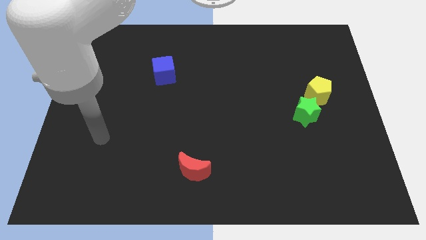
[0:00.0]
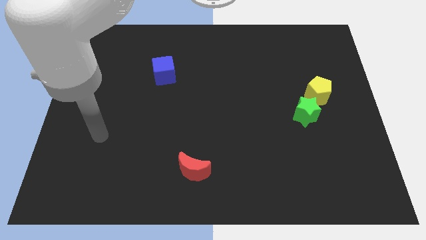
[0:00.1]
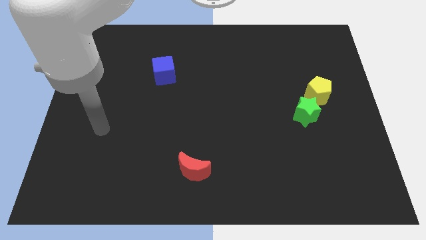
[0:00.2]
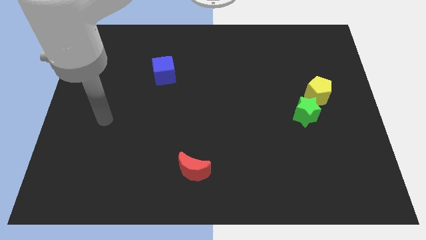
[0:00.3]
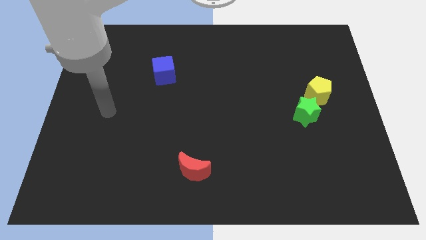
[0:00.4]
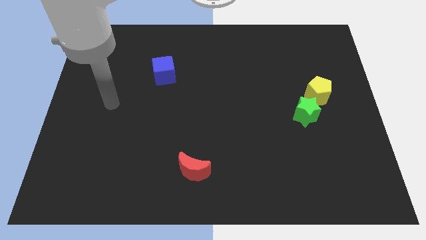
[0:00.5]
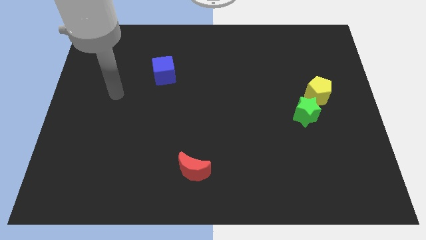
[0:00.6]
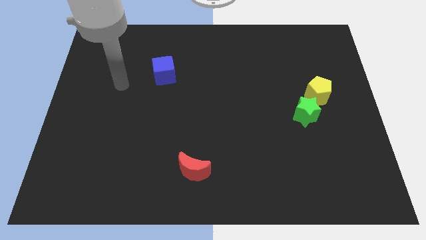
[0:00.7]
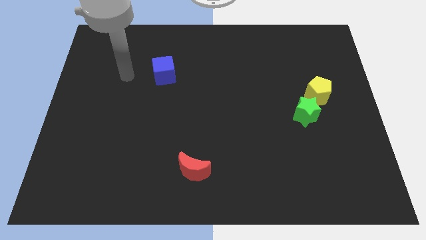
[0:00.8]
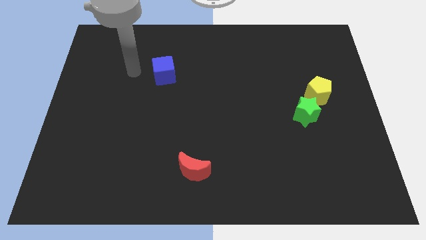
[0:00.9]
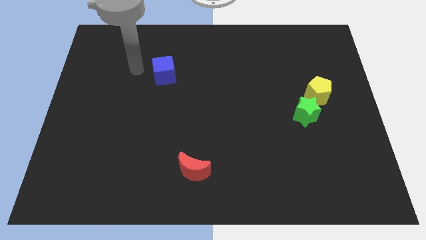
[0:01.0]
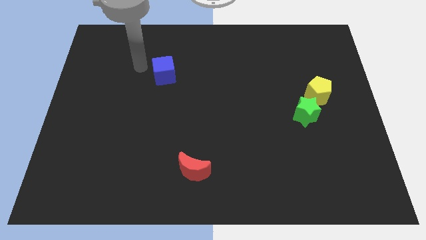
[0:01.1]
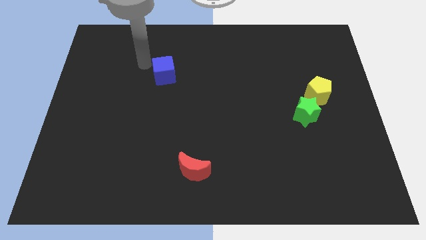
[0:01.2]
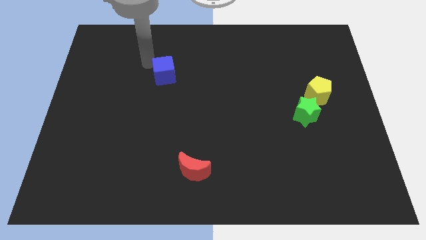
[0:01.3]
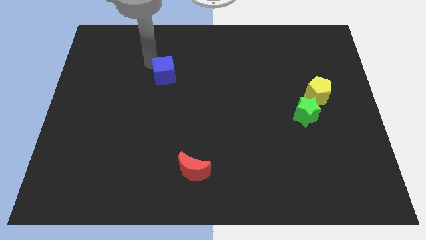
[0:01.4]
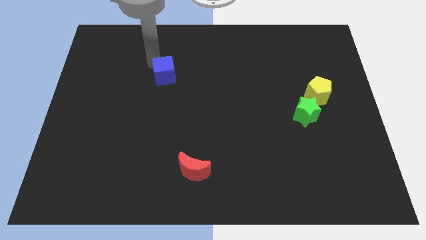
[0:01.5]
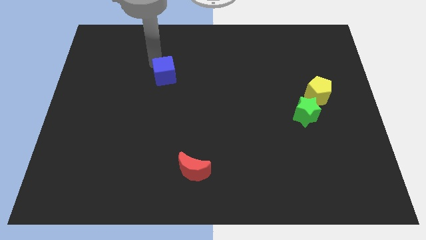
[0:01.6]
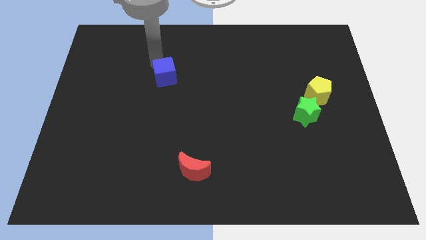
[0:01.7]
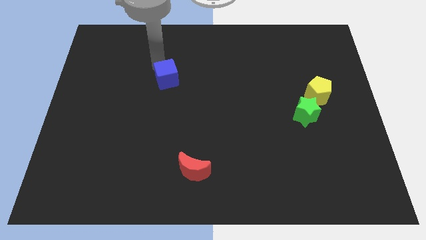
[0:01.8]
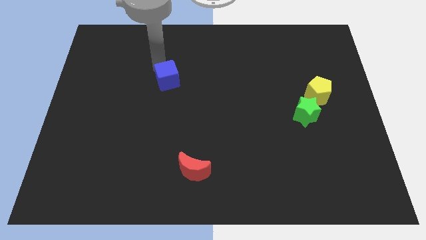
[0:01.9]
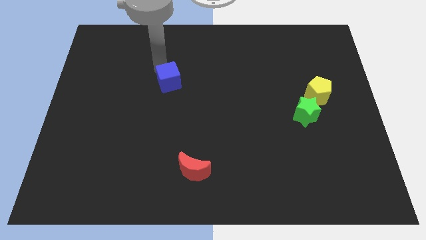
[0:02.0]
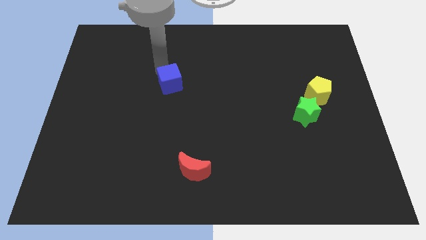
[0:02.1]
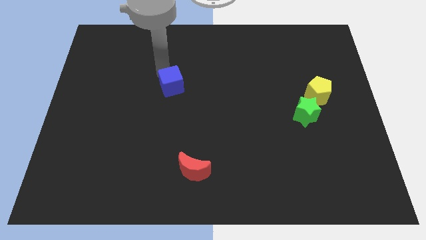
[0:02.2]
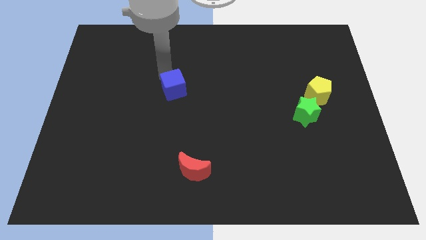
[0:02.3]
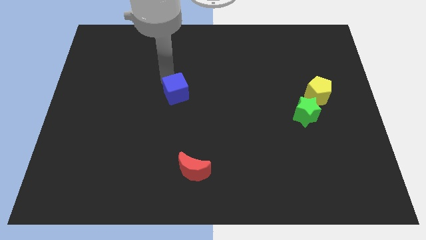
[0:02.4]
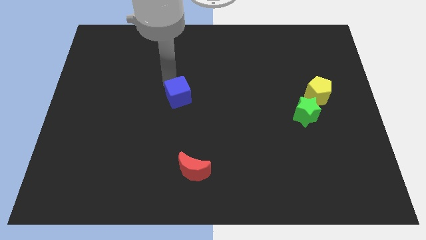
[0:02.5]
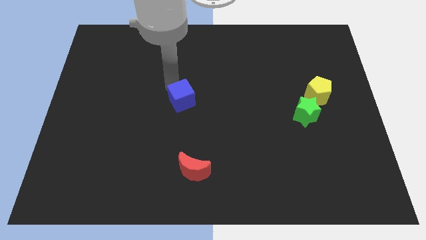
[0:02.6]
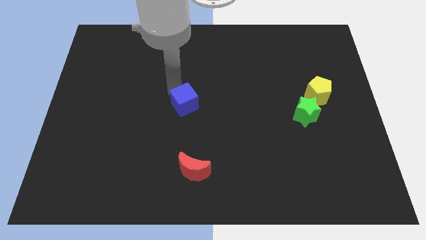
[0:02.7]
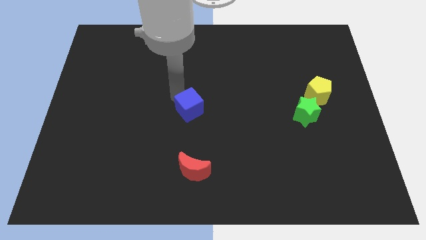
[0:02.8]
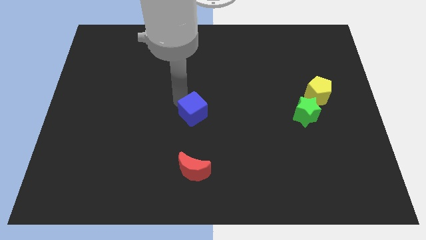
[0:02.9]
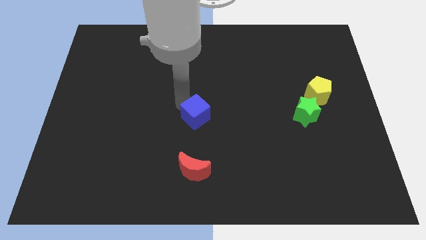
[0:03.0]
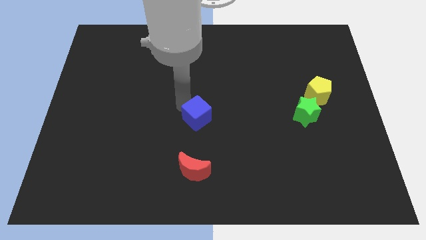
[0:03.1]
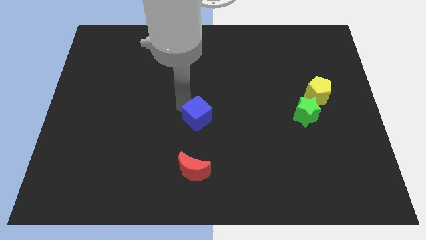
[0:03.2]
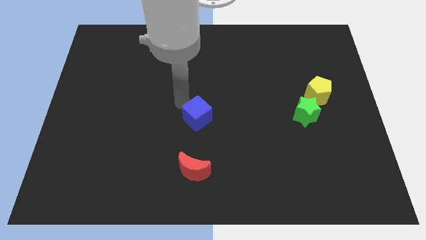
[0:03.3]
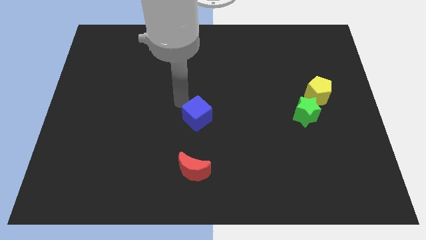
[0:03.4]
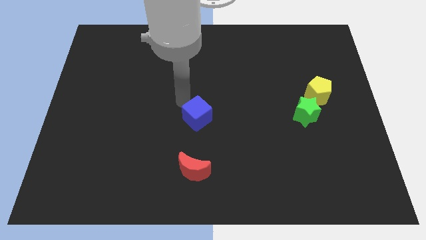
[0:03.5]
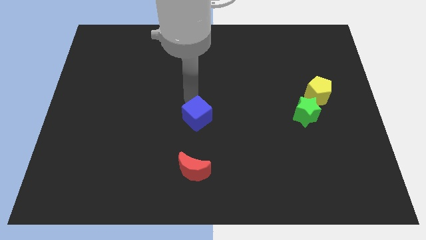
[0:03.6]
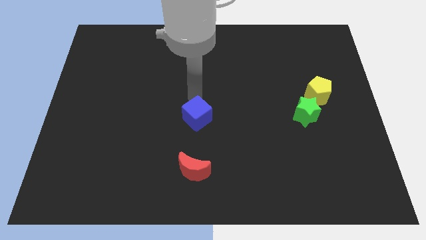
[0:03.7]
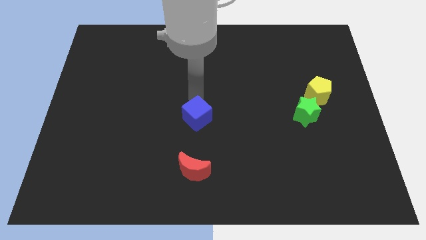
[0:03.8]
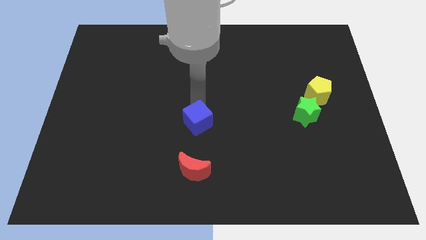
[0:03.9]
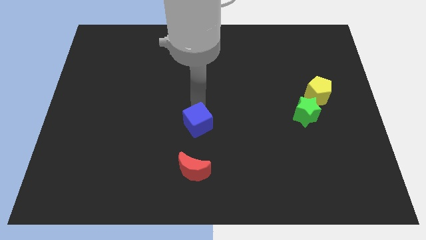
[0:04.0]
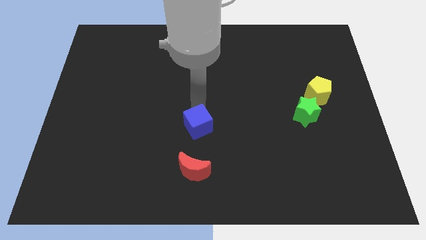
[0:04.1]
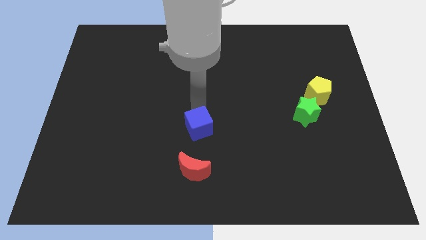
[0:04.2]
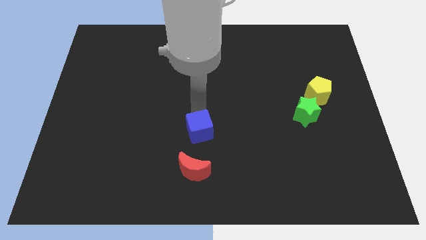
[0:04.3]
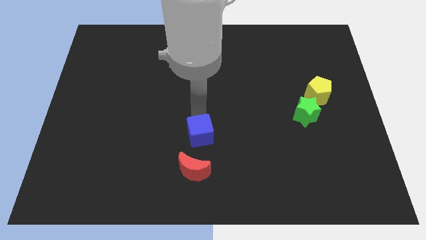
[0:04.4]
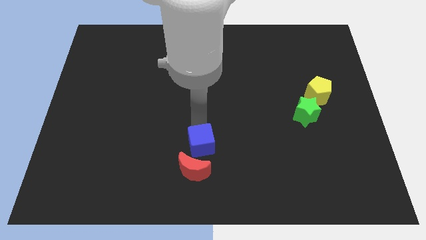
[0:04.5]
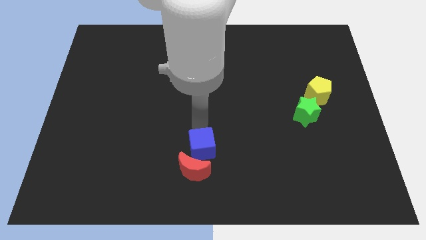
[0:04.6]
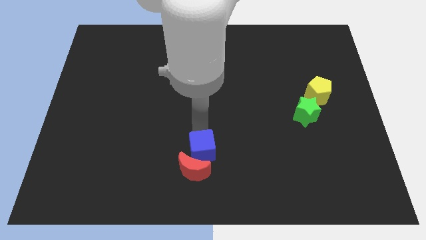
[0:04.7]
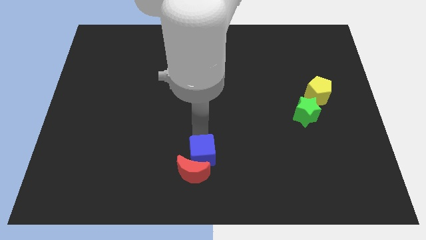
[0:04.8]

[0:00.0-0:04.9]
move the blue block next to the red block

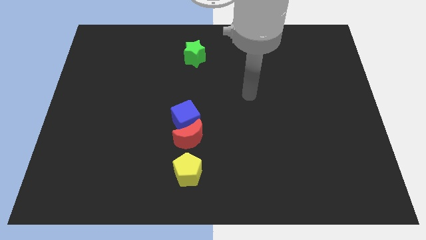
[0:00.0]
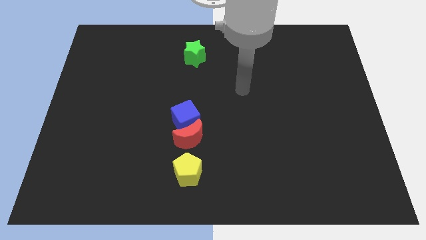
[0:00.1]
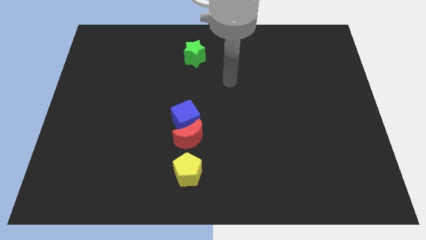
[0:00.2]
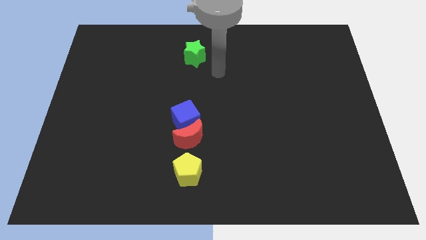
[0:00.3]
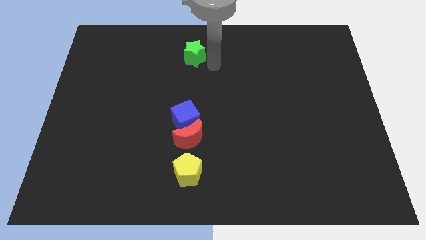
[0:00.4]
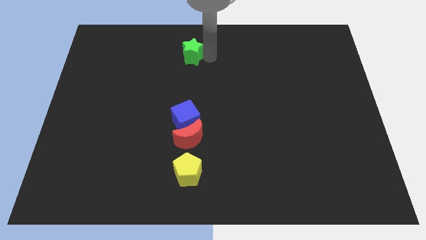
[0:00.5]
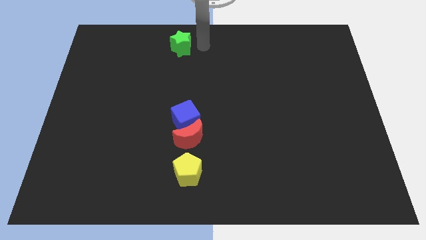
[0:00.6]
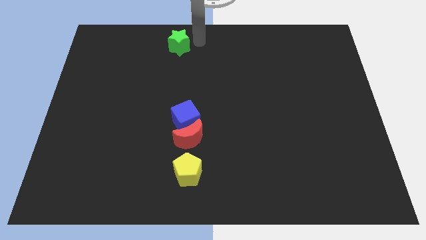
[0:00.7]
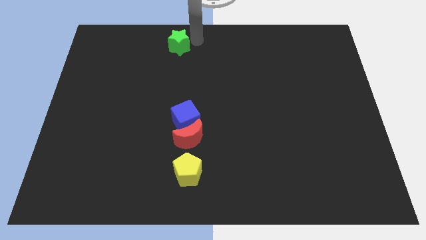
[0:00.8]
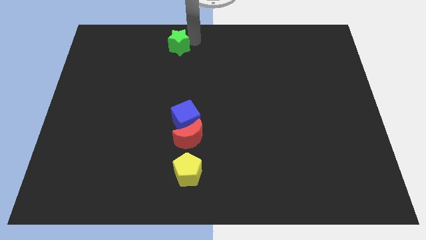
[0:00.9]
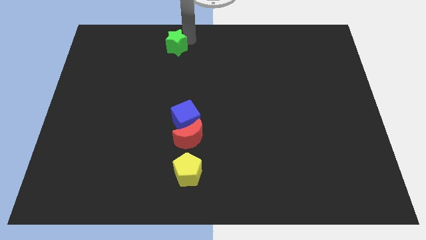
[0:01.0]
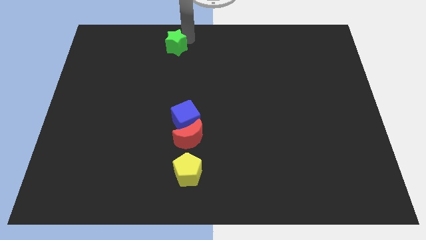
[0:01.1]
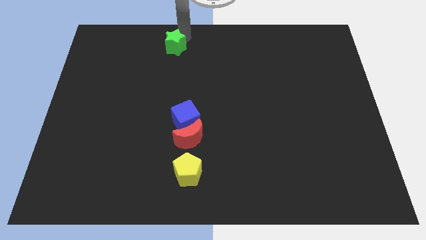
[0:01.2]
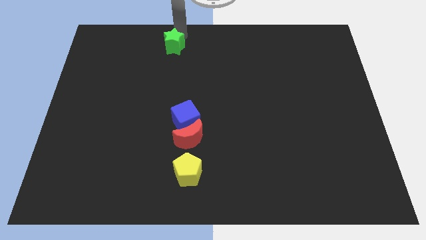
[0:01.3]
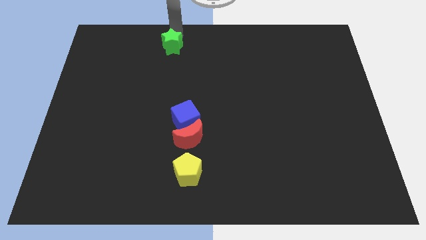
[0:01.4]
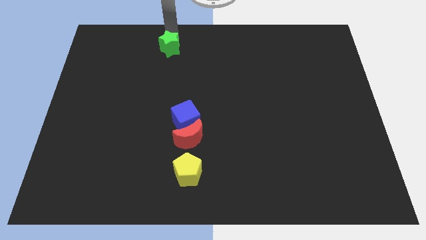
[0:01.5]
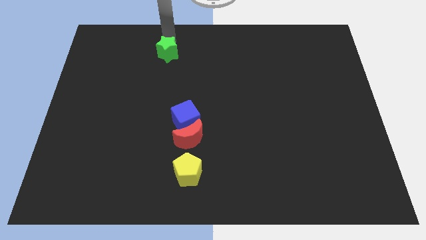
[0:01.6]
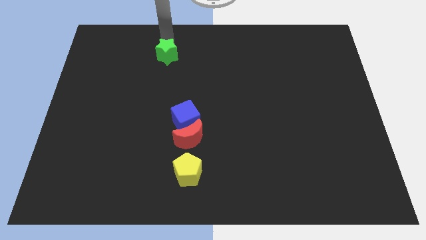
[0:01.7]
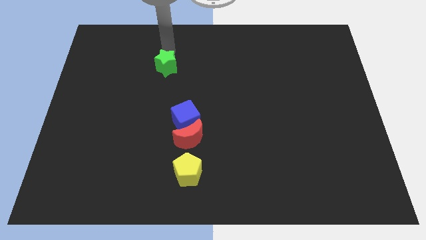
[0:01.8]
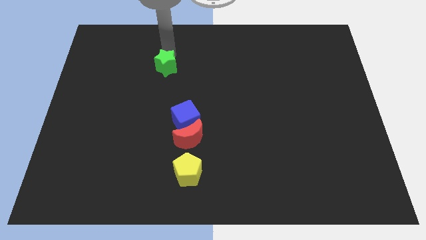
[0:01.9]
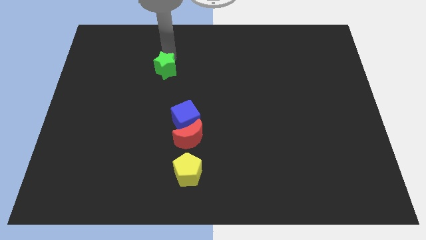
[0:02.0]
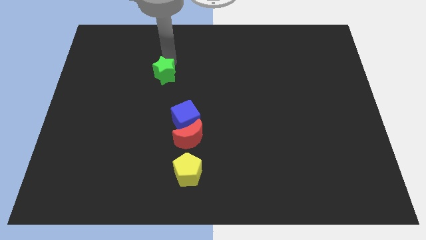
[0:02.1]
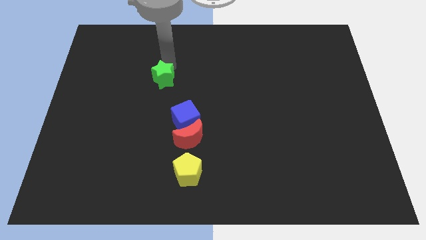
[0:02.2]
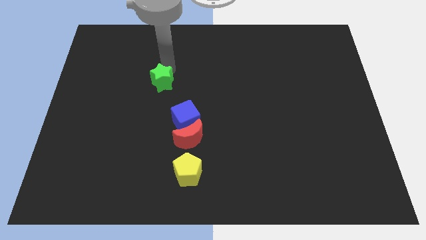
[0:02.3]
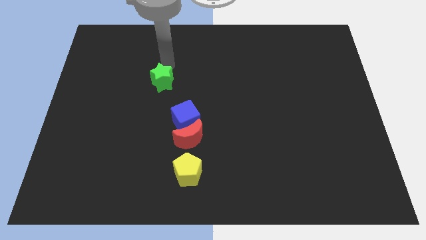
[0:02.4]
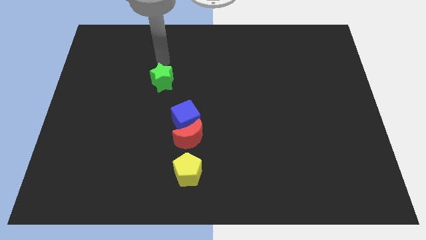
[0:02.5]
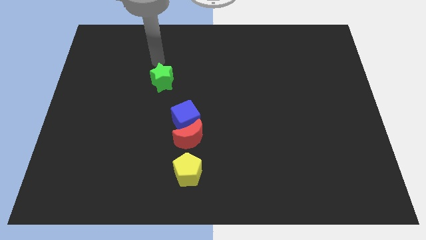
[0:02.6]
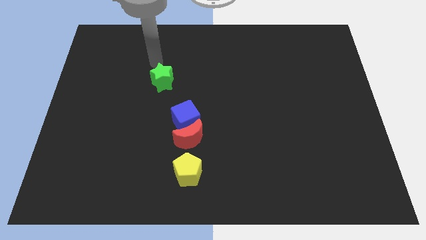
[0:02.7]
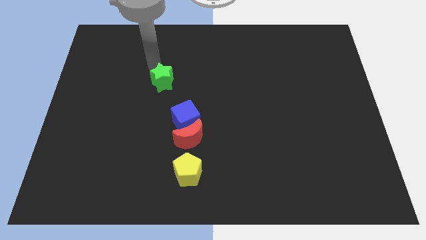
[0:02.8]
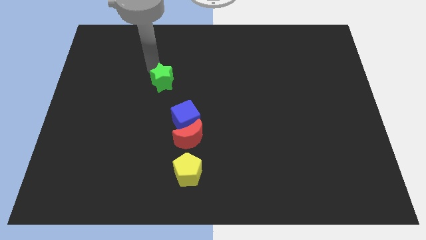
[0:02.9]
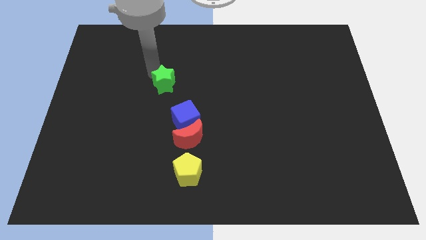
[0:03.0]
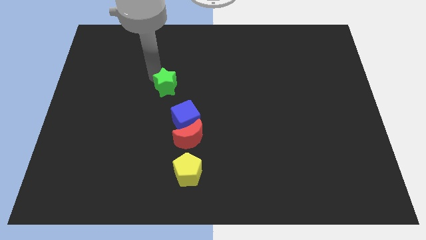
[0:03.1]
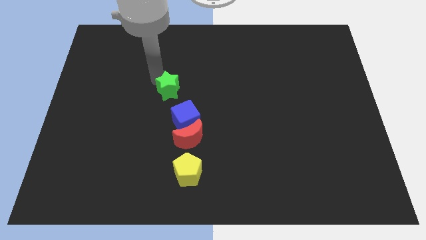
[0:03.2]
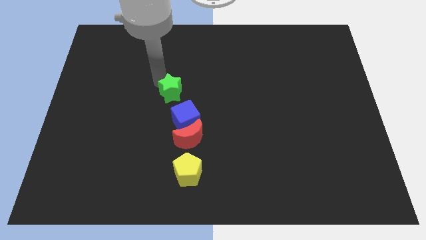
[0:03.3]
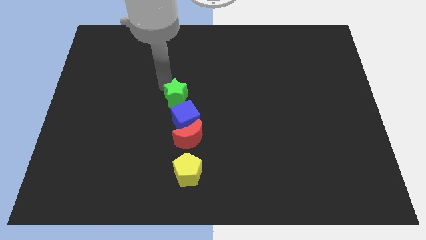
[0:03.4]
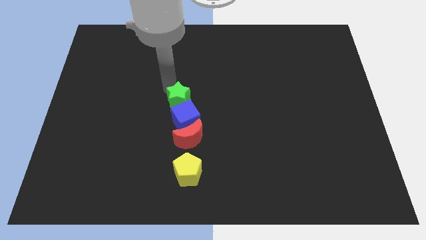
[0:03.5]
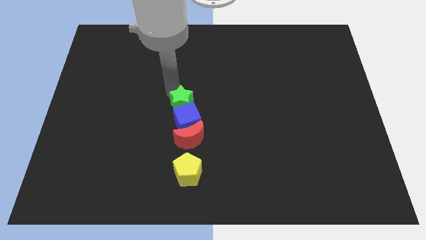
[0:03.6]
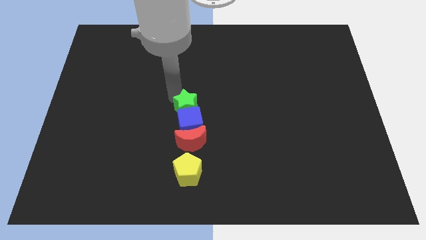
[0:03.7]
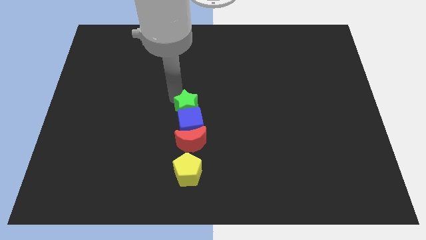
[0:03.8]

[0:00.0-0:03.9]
put the star close to the blue cube

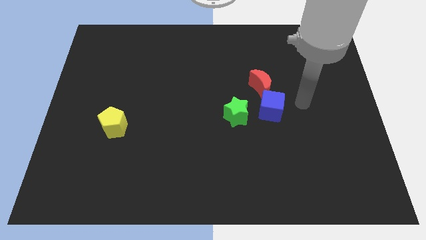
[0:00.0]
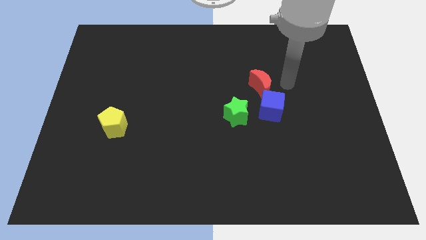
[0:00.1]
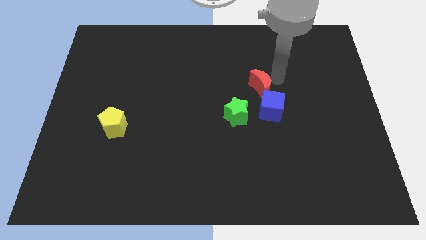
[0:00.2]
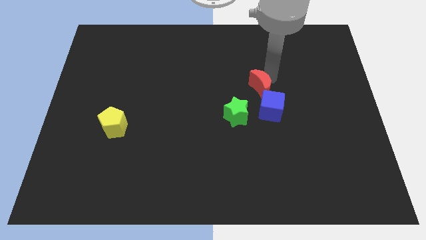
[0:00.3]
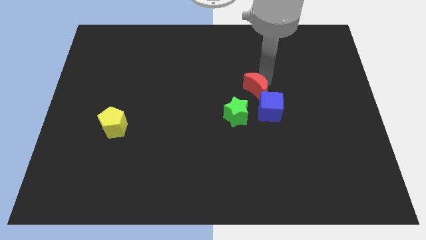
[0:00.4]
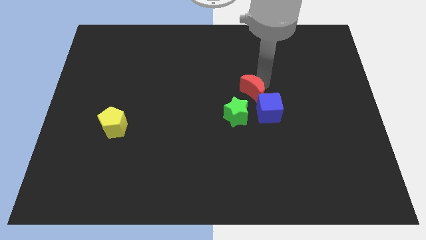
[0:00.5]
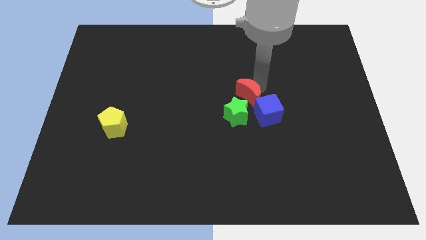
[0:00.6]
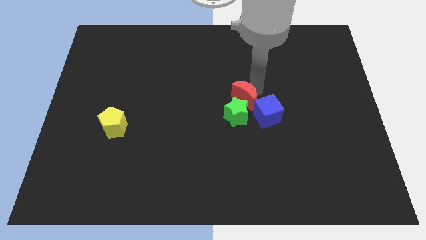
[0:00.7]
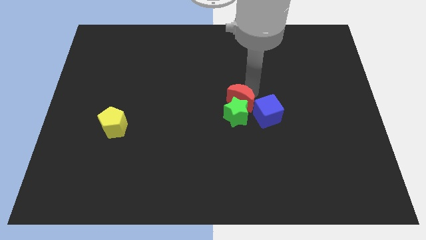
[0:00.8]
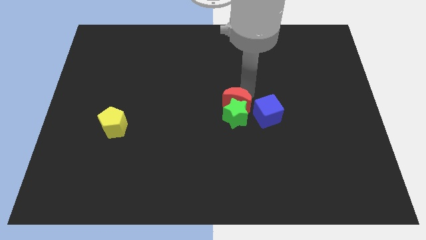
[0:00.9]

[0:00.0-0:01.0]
slide the moon to the green block
